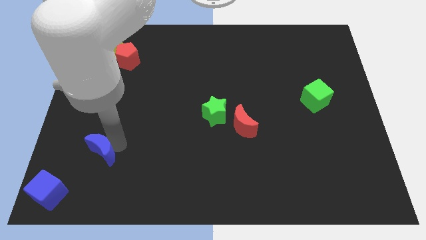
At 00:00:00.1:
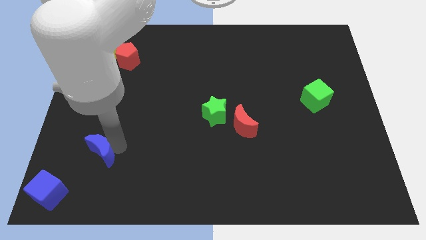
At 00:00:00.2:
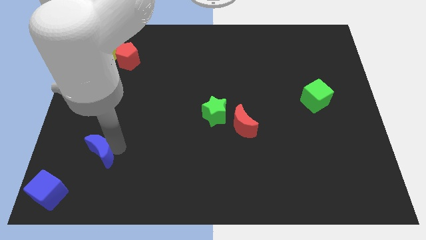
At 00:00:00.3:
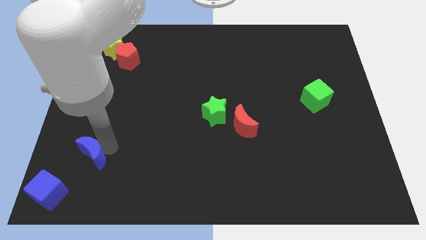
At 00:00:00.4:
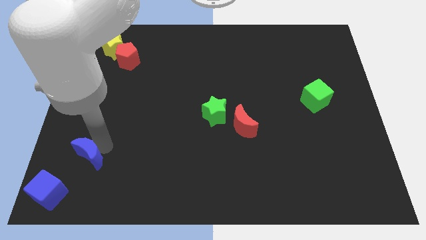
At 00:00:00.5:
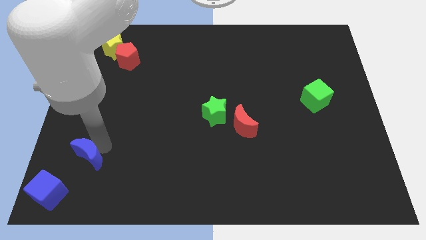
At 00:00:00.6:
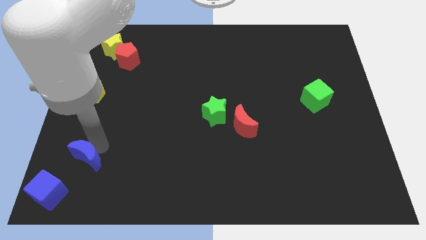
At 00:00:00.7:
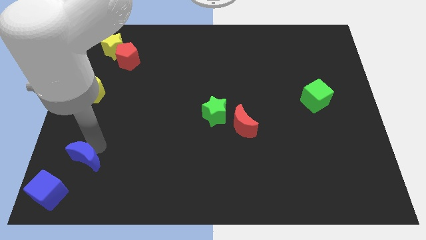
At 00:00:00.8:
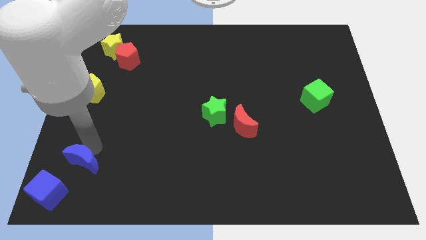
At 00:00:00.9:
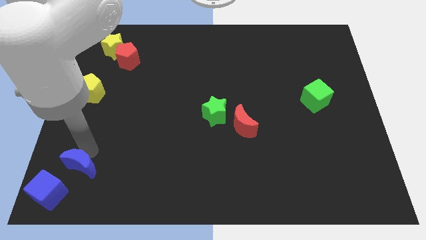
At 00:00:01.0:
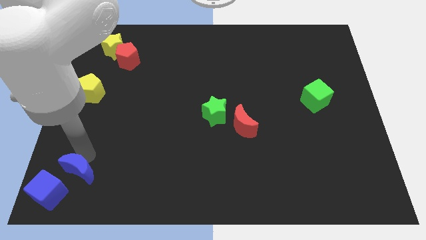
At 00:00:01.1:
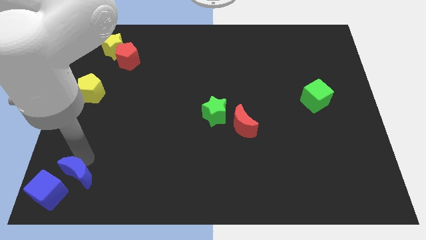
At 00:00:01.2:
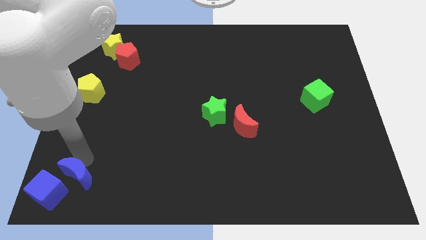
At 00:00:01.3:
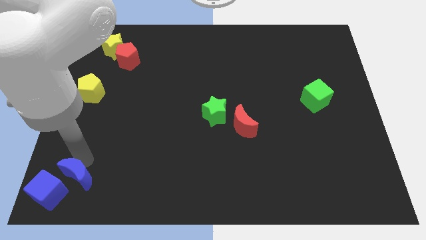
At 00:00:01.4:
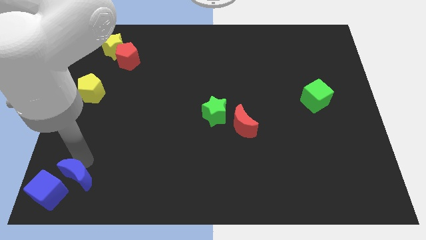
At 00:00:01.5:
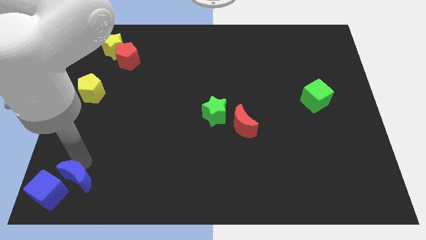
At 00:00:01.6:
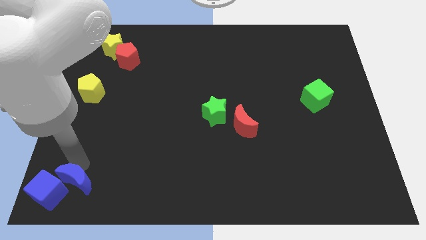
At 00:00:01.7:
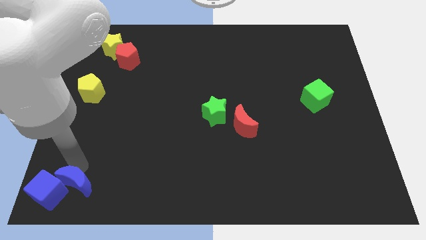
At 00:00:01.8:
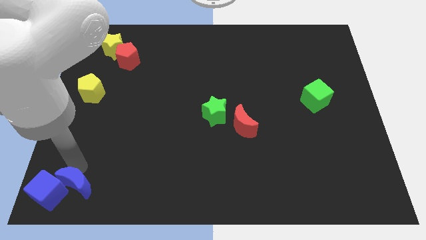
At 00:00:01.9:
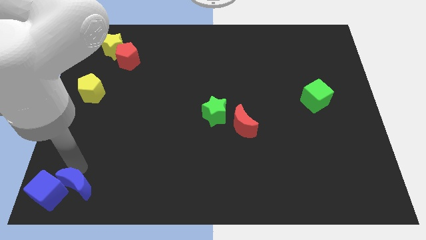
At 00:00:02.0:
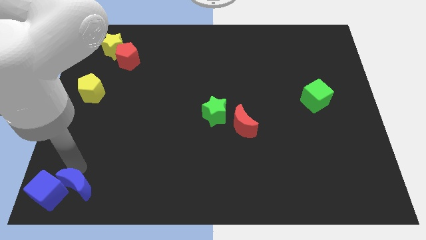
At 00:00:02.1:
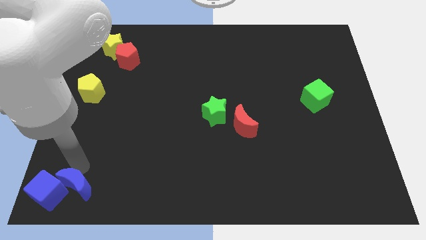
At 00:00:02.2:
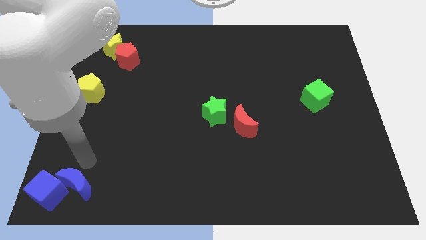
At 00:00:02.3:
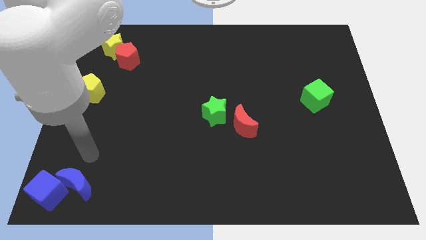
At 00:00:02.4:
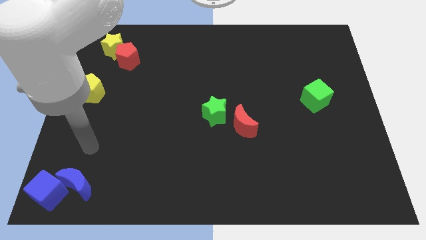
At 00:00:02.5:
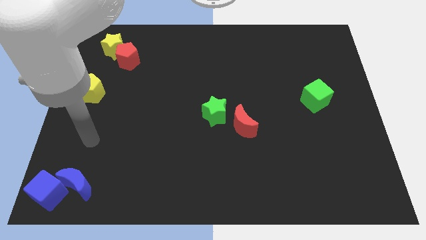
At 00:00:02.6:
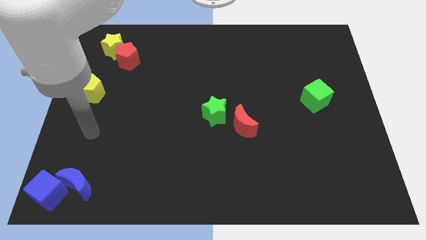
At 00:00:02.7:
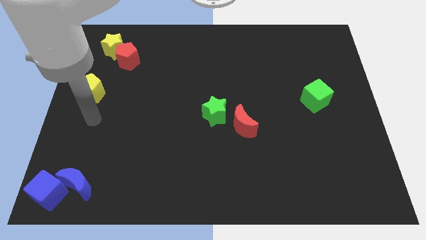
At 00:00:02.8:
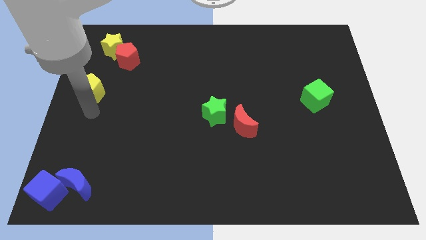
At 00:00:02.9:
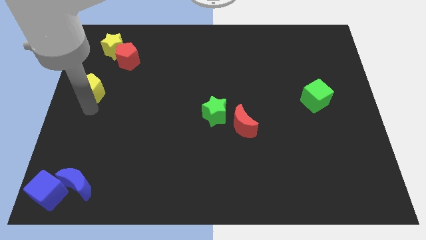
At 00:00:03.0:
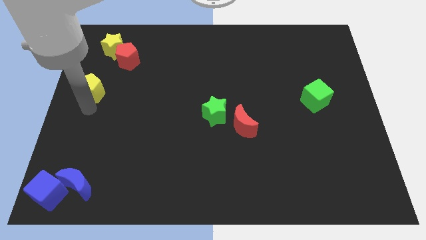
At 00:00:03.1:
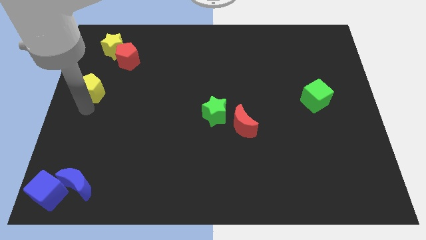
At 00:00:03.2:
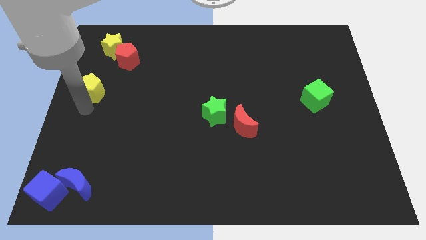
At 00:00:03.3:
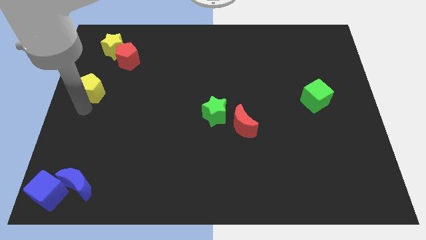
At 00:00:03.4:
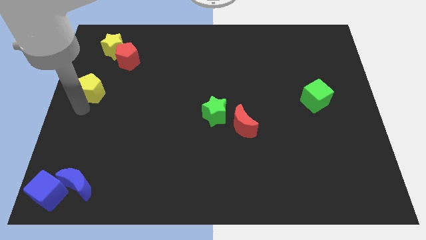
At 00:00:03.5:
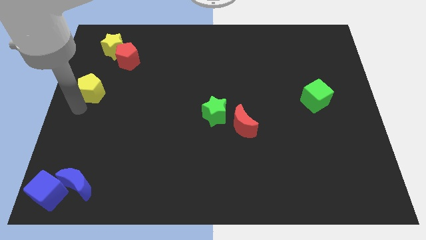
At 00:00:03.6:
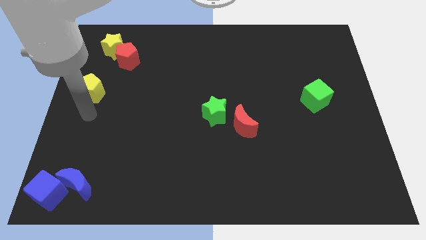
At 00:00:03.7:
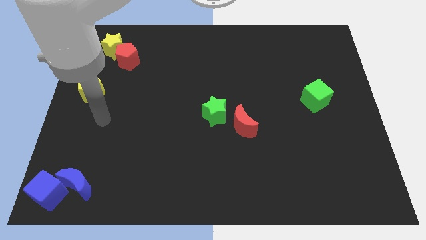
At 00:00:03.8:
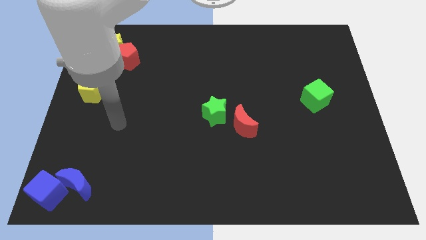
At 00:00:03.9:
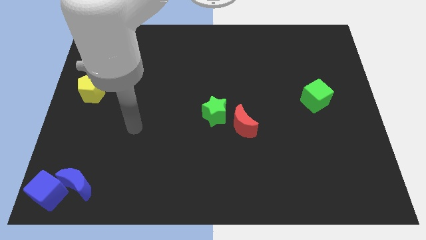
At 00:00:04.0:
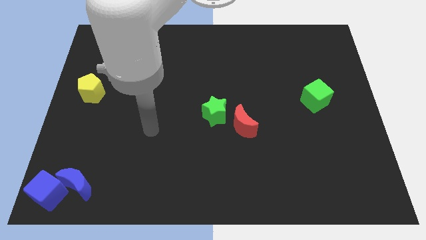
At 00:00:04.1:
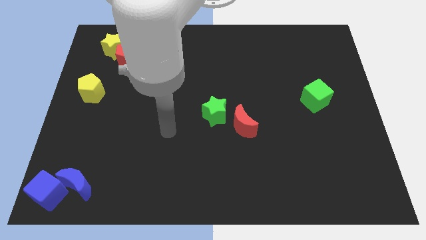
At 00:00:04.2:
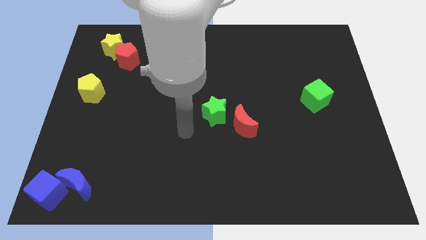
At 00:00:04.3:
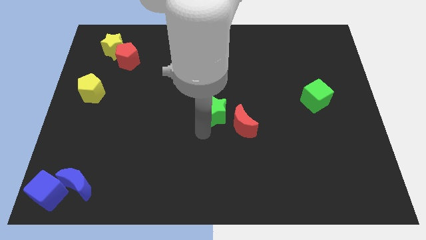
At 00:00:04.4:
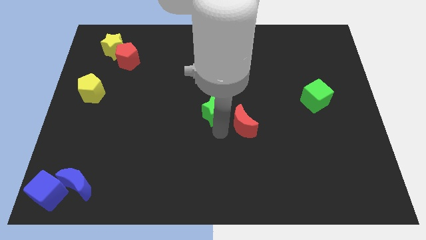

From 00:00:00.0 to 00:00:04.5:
place the blue crescent at the diagonally right side of the blue cube

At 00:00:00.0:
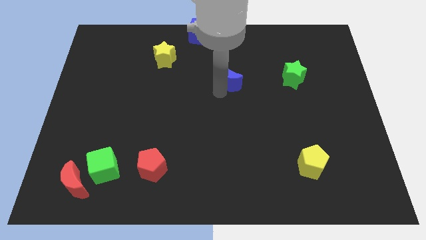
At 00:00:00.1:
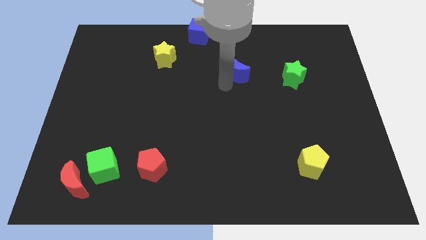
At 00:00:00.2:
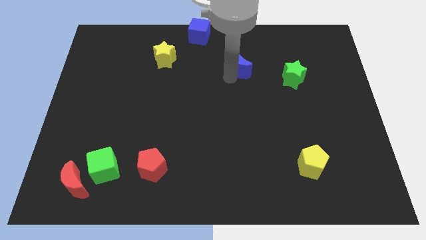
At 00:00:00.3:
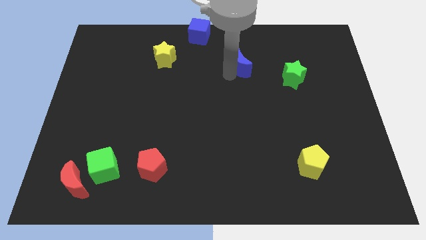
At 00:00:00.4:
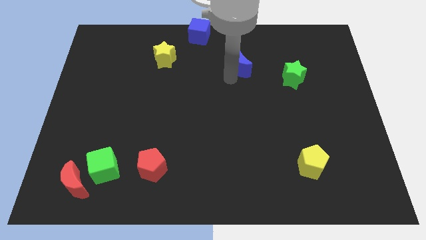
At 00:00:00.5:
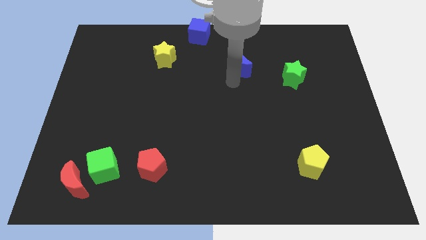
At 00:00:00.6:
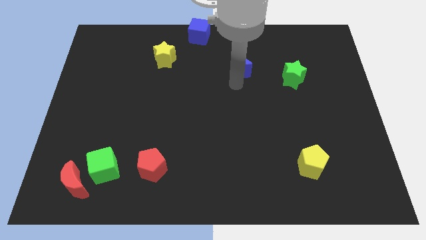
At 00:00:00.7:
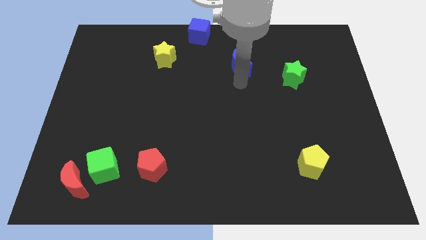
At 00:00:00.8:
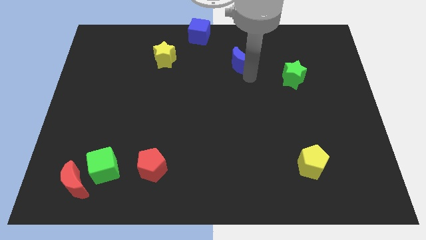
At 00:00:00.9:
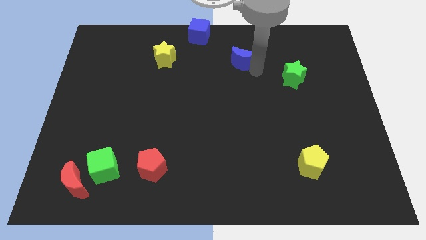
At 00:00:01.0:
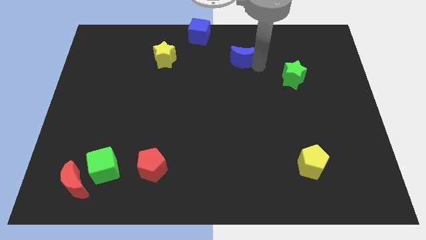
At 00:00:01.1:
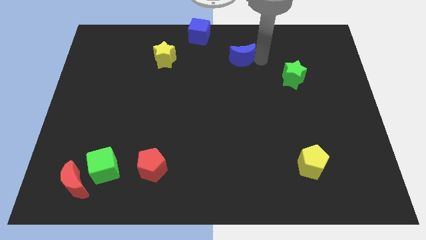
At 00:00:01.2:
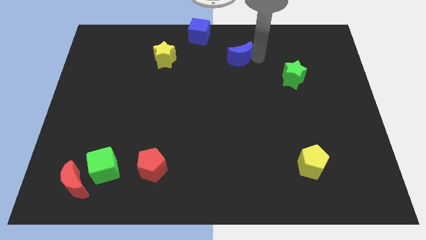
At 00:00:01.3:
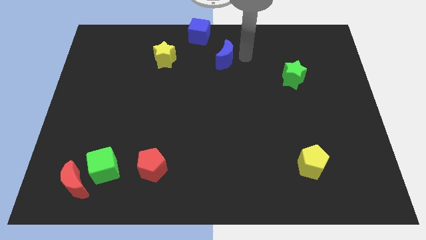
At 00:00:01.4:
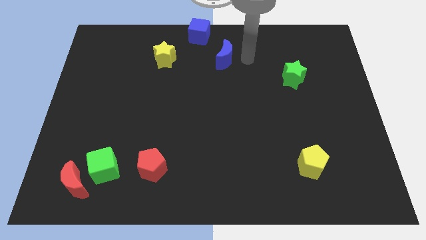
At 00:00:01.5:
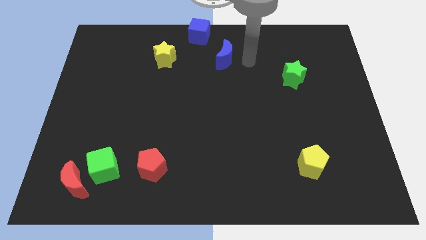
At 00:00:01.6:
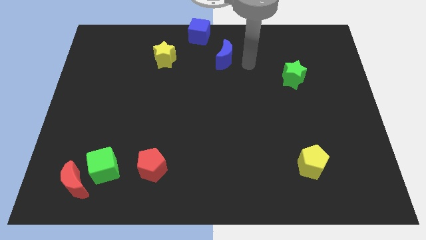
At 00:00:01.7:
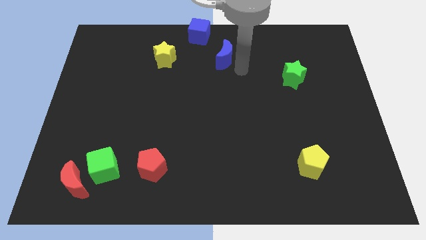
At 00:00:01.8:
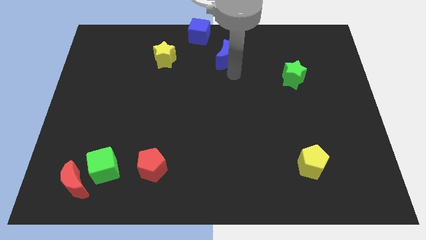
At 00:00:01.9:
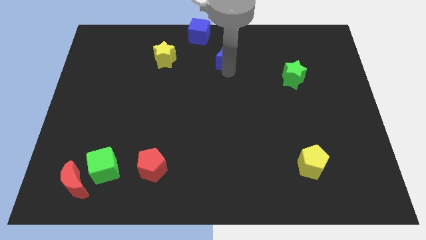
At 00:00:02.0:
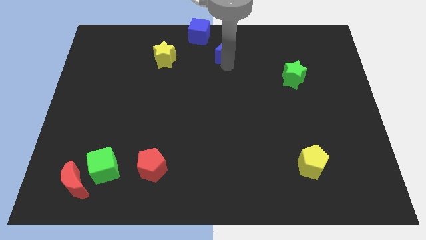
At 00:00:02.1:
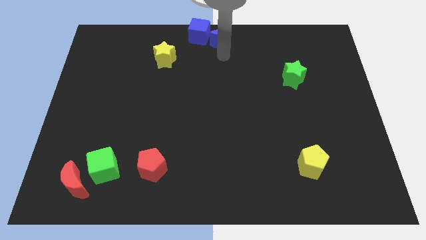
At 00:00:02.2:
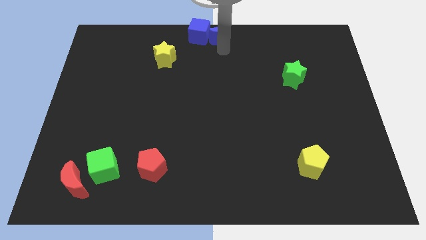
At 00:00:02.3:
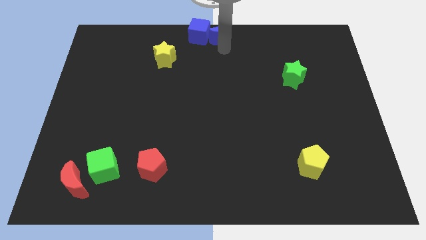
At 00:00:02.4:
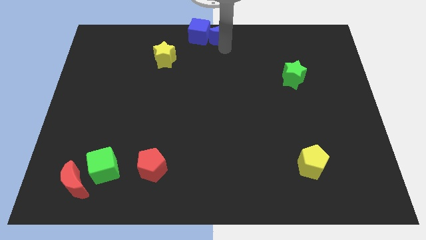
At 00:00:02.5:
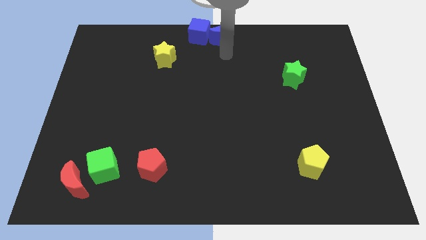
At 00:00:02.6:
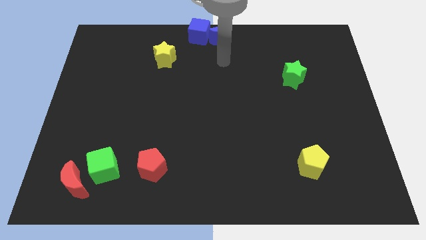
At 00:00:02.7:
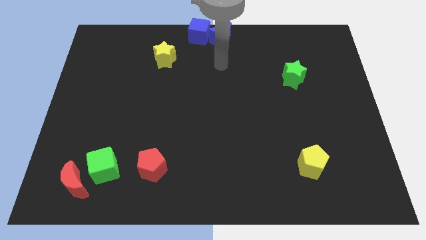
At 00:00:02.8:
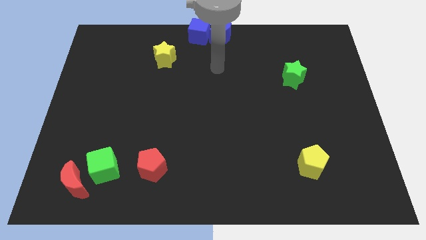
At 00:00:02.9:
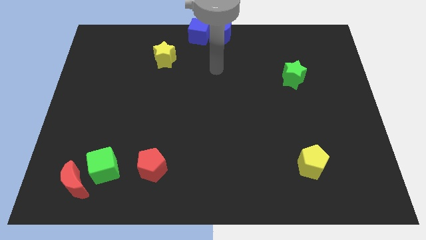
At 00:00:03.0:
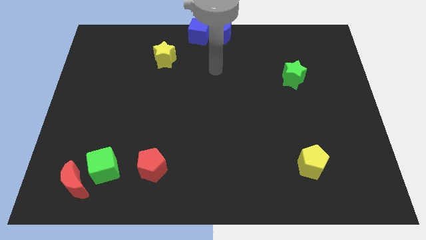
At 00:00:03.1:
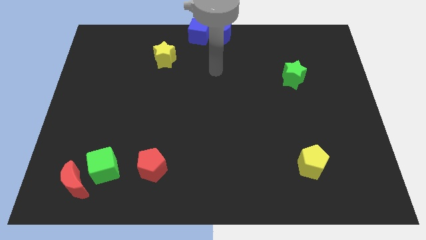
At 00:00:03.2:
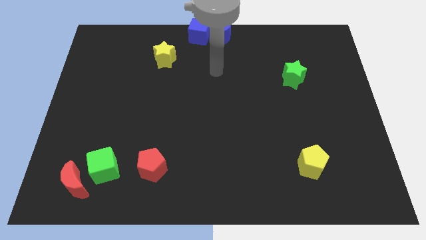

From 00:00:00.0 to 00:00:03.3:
move the blue moon right to the blue cube

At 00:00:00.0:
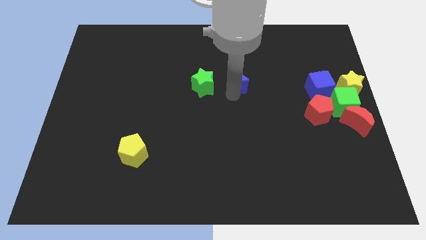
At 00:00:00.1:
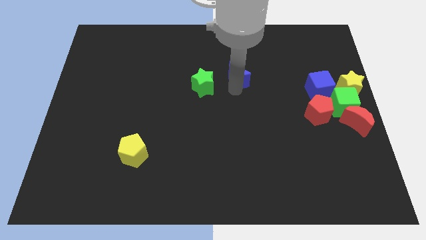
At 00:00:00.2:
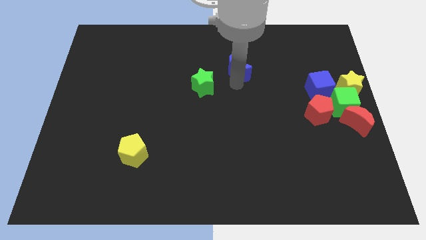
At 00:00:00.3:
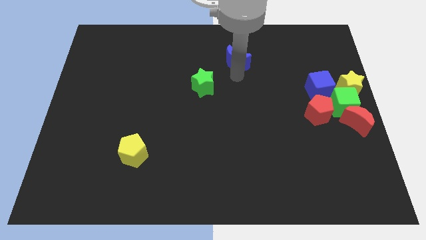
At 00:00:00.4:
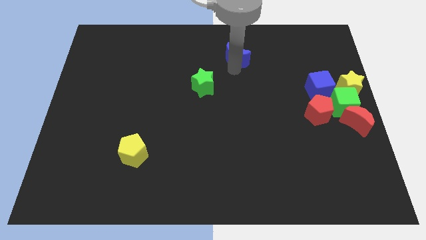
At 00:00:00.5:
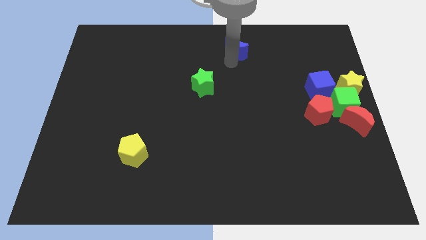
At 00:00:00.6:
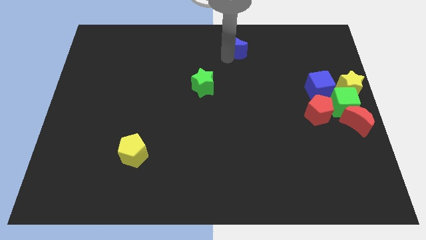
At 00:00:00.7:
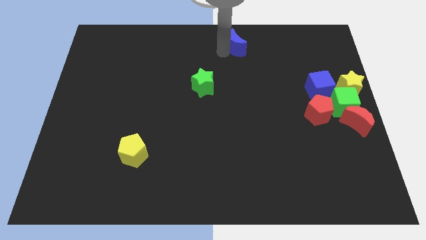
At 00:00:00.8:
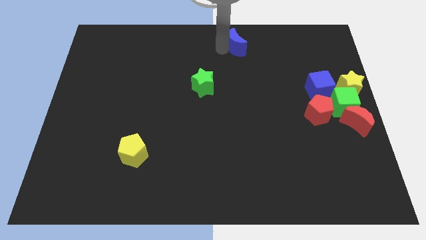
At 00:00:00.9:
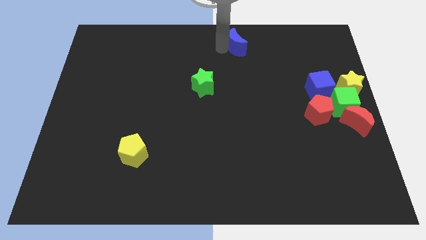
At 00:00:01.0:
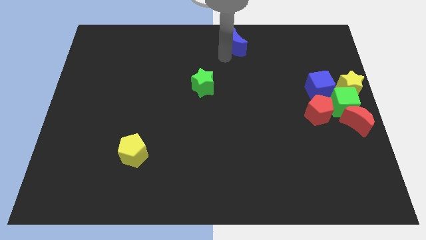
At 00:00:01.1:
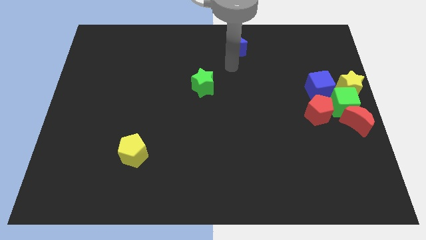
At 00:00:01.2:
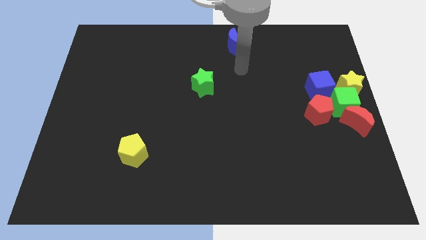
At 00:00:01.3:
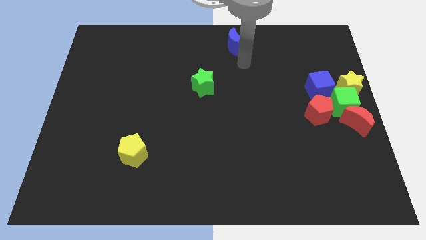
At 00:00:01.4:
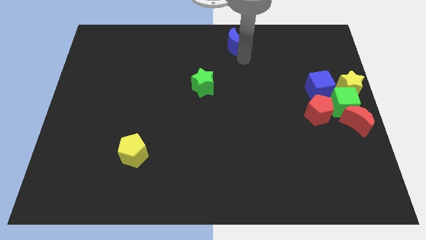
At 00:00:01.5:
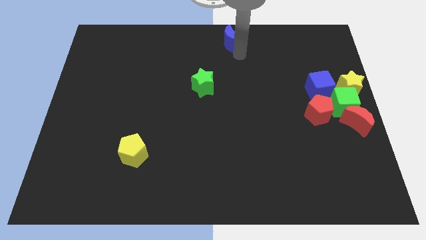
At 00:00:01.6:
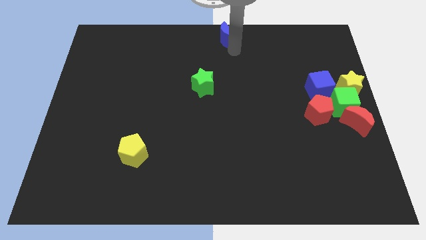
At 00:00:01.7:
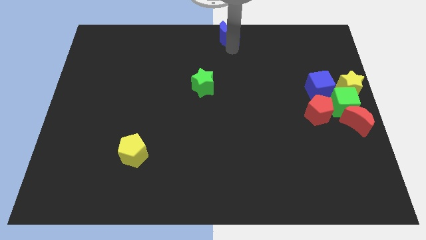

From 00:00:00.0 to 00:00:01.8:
place the blue moon on the top center of the board
